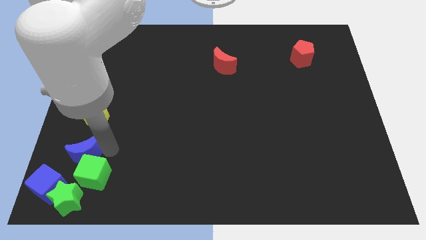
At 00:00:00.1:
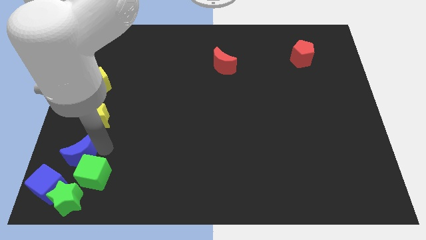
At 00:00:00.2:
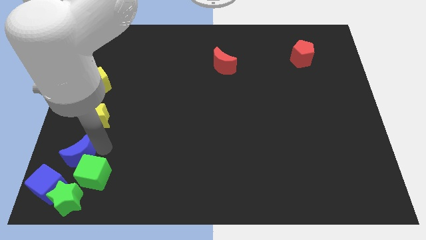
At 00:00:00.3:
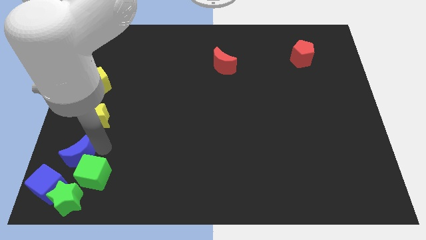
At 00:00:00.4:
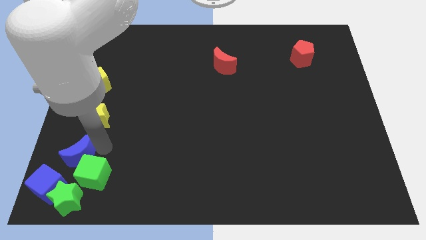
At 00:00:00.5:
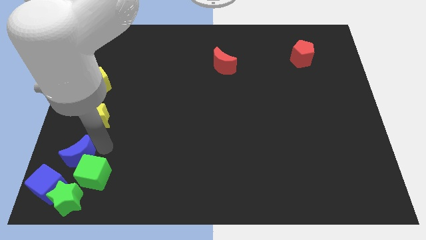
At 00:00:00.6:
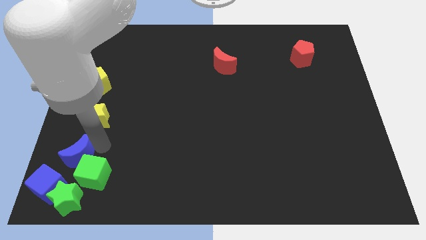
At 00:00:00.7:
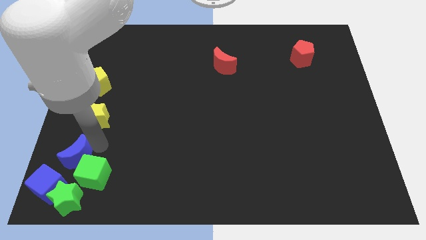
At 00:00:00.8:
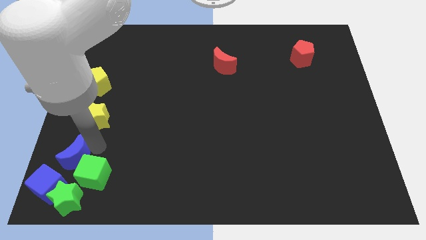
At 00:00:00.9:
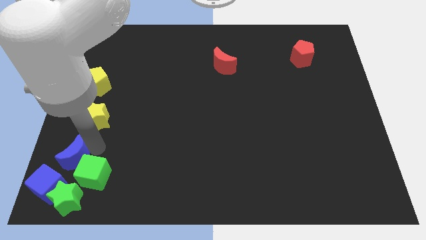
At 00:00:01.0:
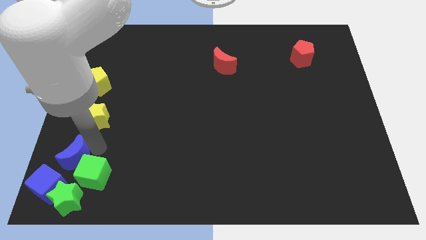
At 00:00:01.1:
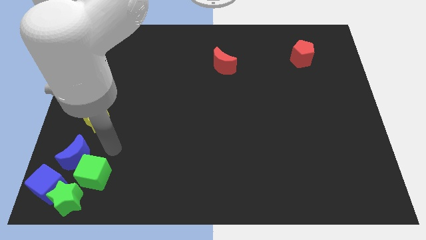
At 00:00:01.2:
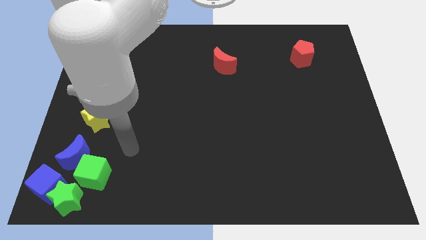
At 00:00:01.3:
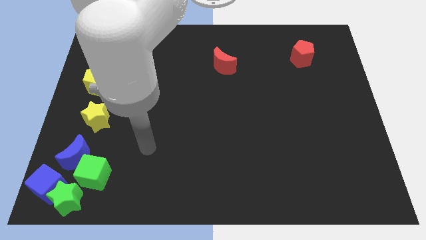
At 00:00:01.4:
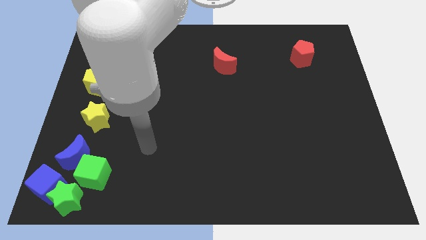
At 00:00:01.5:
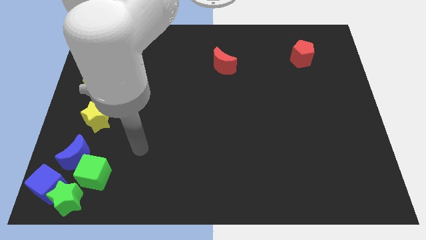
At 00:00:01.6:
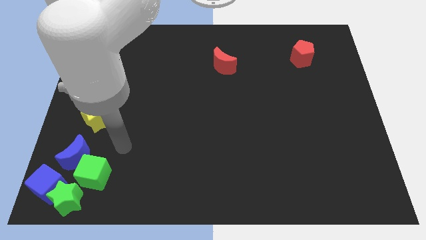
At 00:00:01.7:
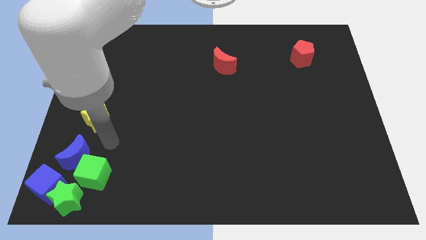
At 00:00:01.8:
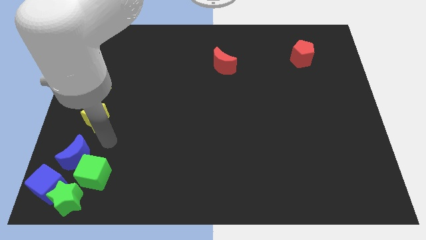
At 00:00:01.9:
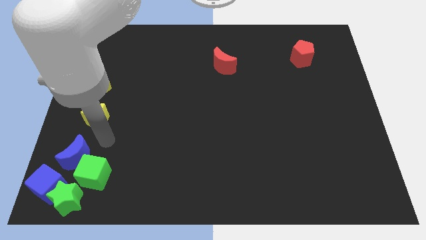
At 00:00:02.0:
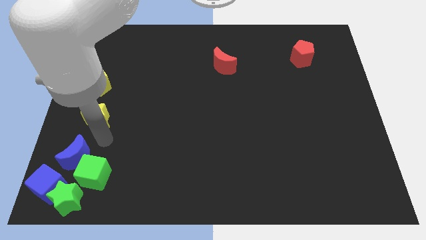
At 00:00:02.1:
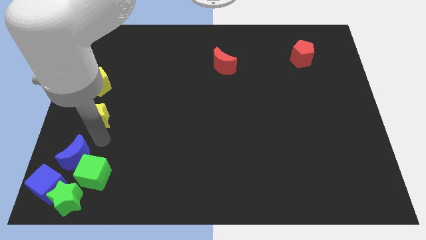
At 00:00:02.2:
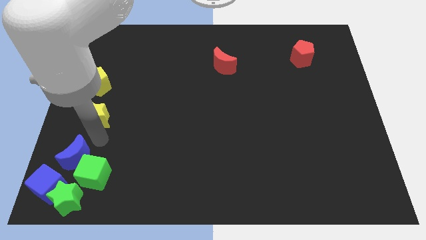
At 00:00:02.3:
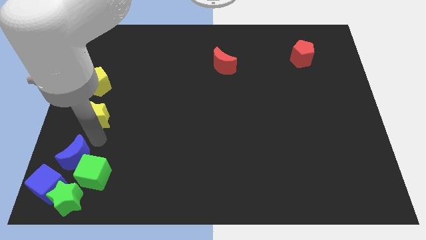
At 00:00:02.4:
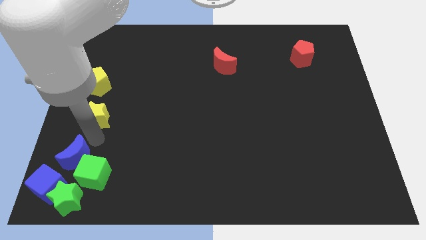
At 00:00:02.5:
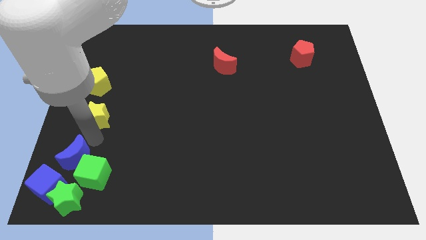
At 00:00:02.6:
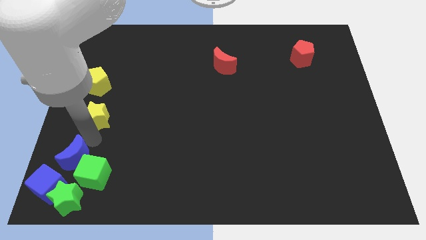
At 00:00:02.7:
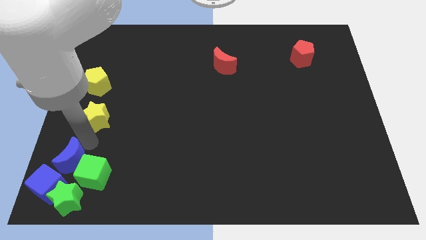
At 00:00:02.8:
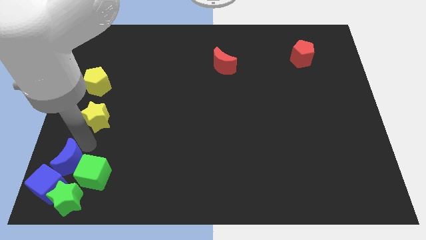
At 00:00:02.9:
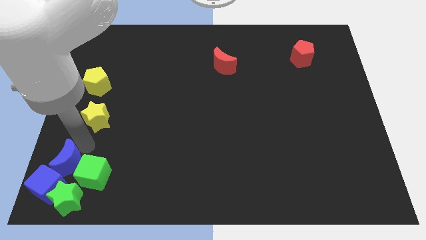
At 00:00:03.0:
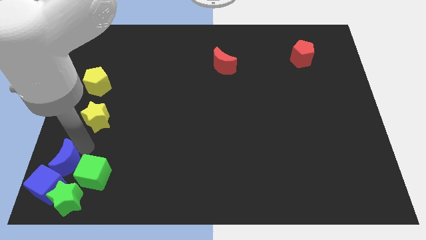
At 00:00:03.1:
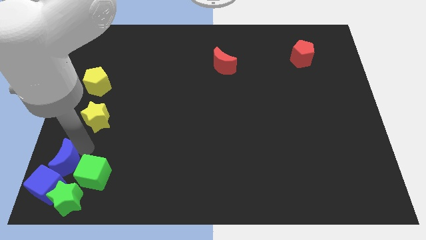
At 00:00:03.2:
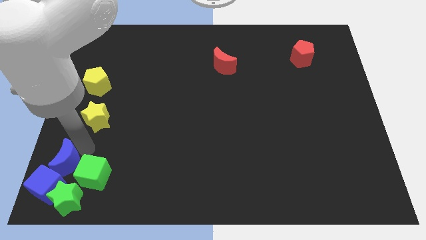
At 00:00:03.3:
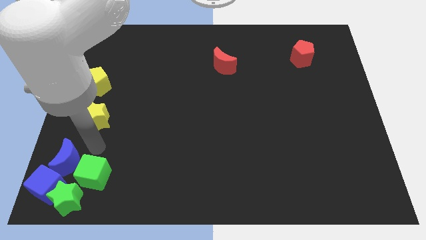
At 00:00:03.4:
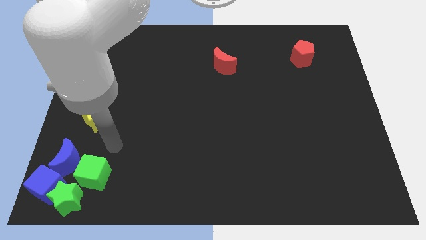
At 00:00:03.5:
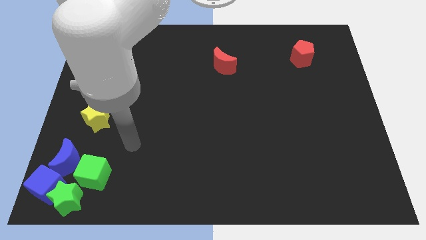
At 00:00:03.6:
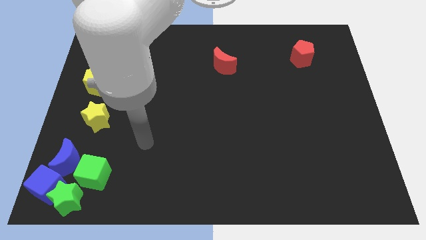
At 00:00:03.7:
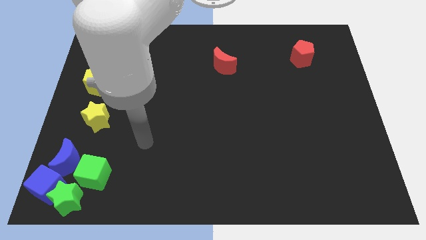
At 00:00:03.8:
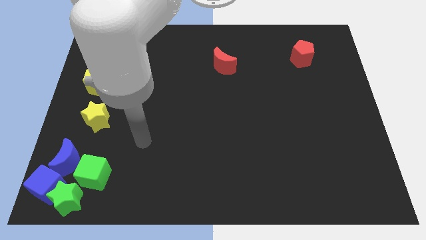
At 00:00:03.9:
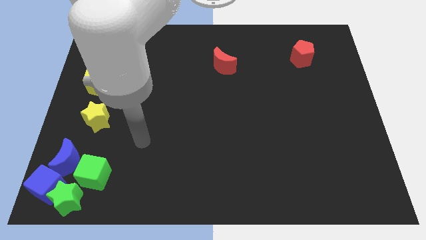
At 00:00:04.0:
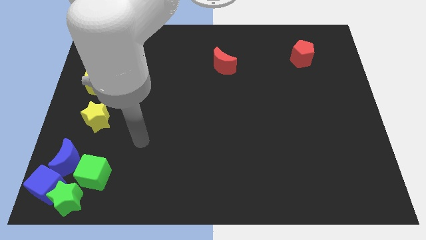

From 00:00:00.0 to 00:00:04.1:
slightly push the blue crescent into the blue cube

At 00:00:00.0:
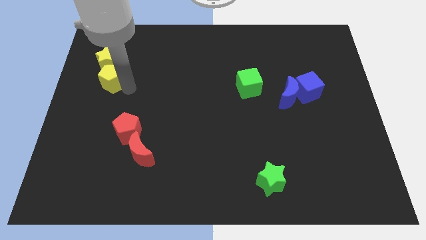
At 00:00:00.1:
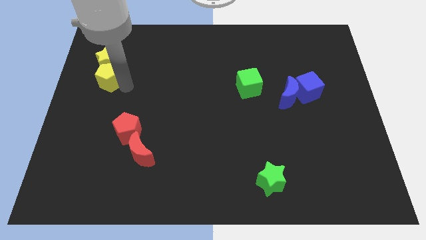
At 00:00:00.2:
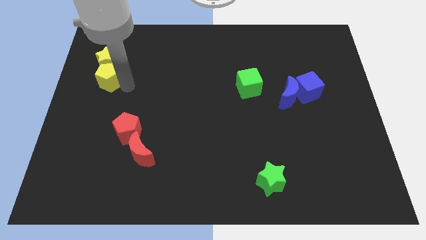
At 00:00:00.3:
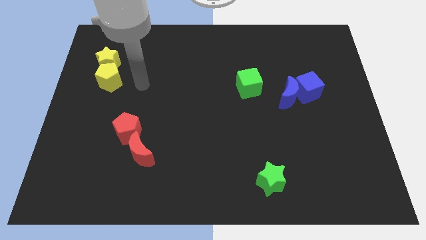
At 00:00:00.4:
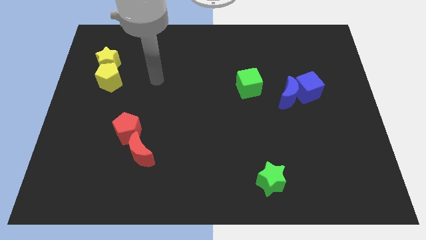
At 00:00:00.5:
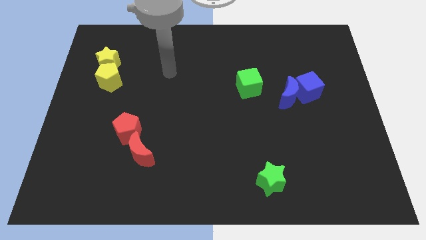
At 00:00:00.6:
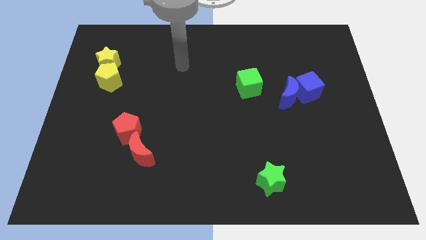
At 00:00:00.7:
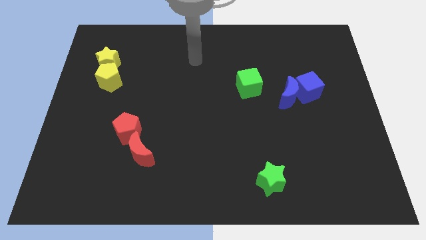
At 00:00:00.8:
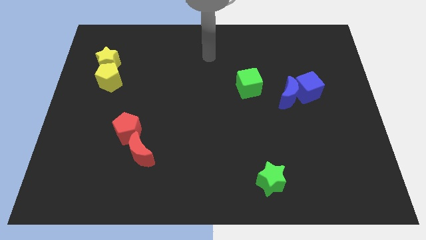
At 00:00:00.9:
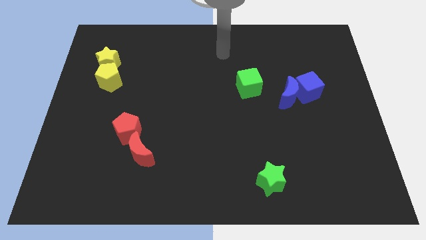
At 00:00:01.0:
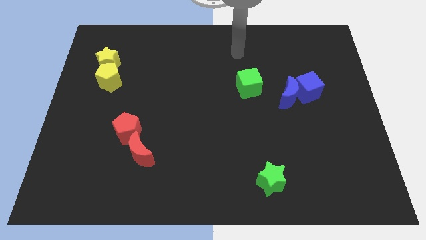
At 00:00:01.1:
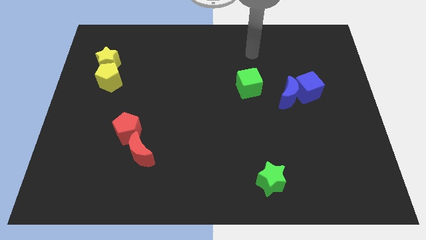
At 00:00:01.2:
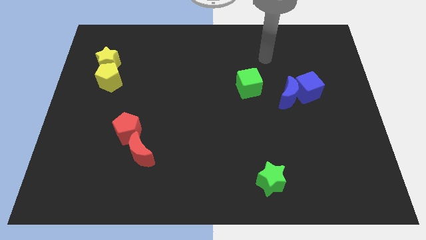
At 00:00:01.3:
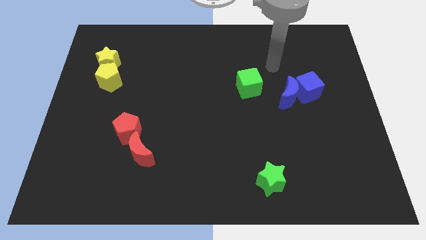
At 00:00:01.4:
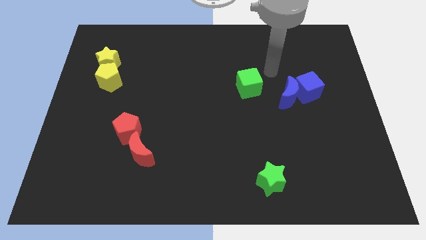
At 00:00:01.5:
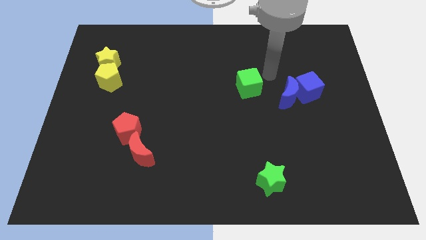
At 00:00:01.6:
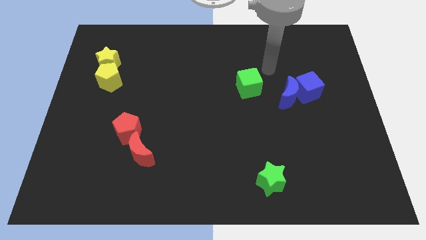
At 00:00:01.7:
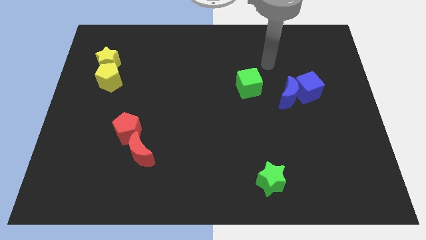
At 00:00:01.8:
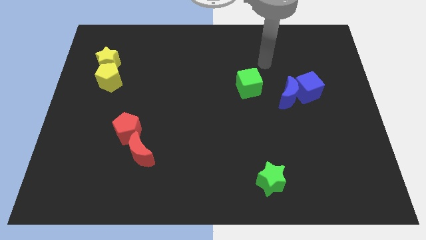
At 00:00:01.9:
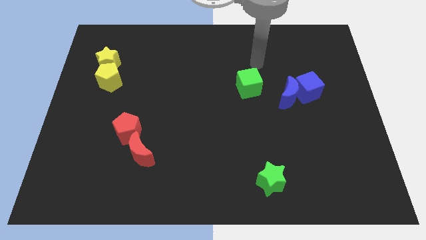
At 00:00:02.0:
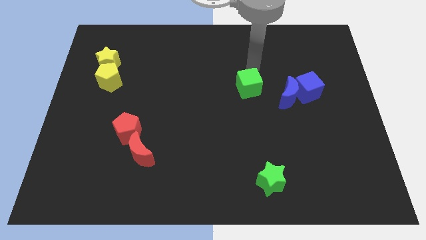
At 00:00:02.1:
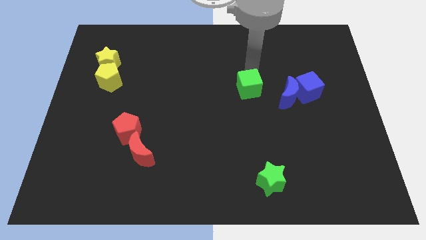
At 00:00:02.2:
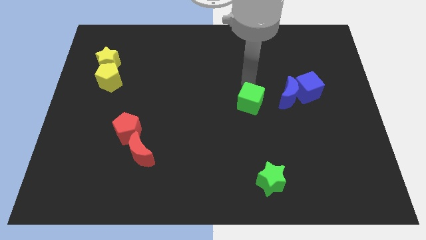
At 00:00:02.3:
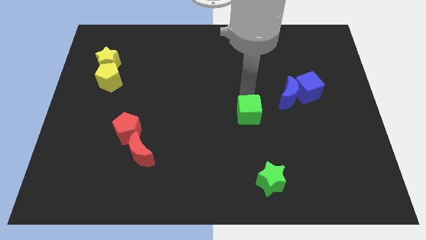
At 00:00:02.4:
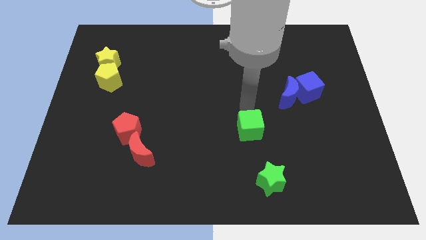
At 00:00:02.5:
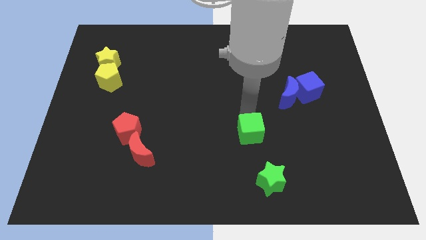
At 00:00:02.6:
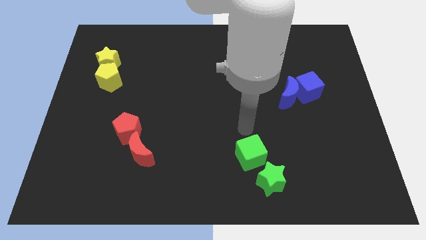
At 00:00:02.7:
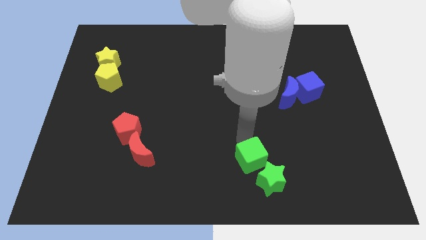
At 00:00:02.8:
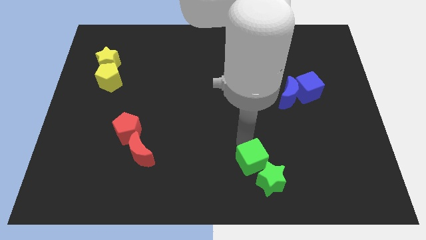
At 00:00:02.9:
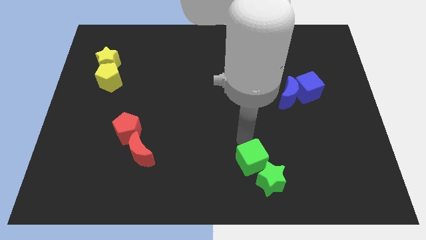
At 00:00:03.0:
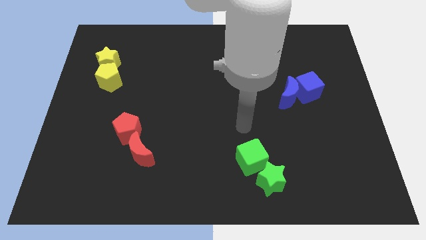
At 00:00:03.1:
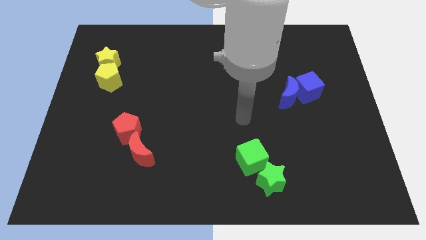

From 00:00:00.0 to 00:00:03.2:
place the green cube at the top left of the green star

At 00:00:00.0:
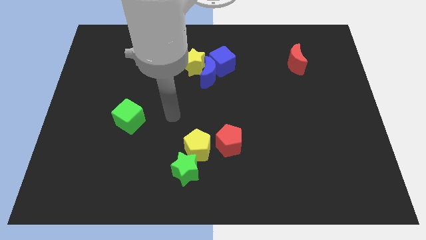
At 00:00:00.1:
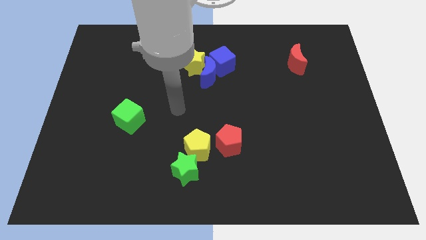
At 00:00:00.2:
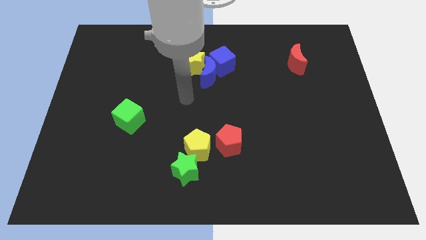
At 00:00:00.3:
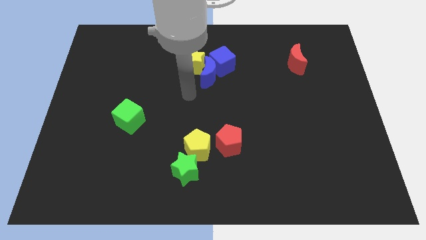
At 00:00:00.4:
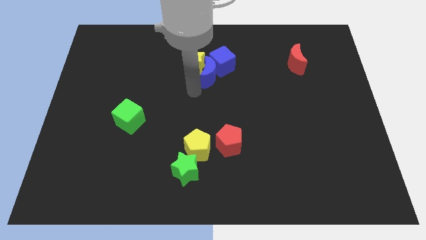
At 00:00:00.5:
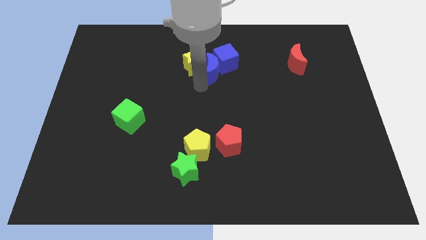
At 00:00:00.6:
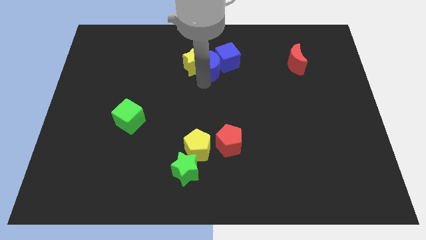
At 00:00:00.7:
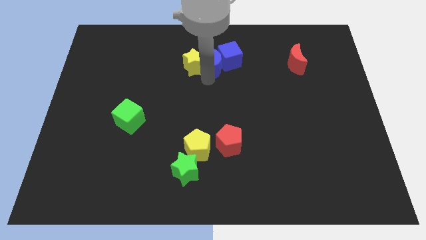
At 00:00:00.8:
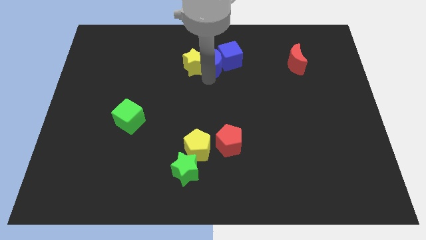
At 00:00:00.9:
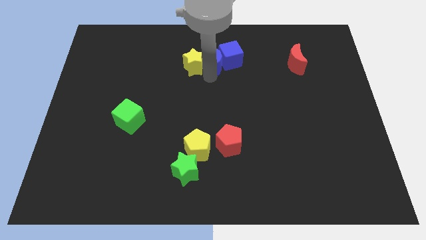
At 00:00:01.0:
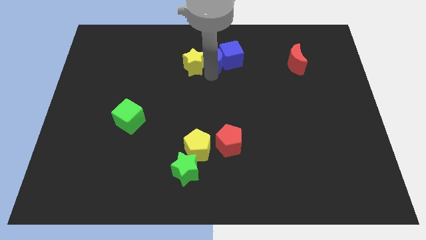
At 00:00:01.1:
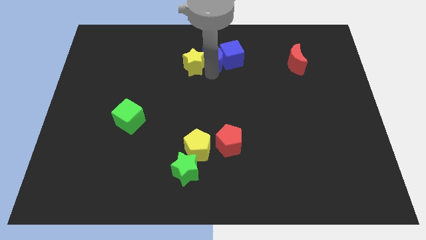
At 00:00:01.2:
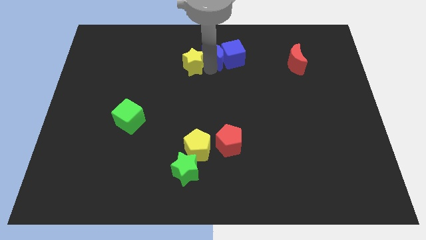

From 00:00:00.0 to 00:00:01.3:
slide the blue moon in between the yellow star and the blue cube

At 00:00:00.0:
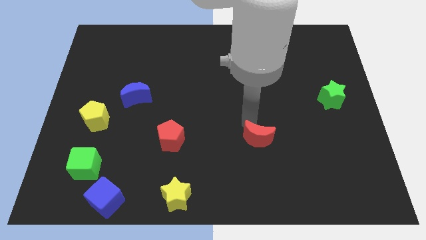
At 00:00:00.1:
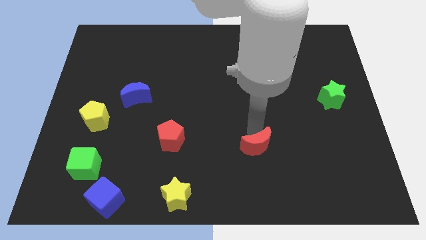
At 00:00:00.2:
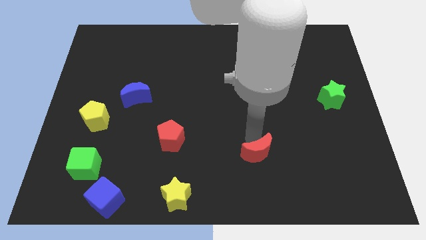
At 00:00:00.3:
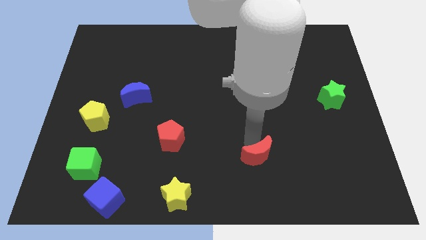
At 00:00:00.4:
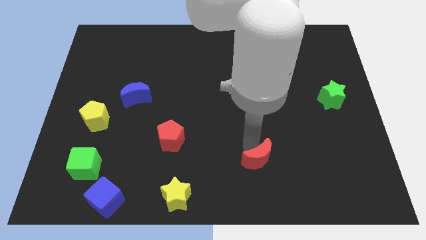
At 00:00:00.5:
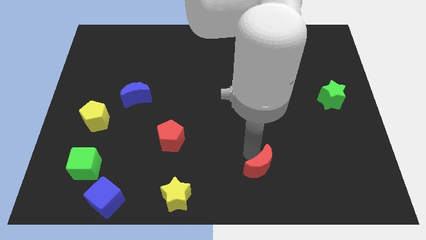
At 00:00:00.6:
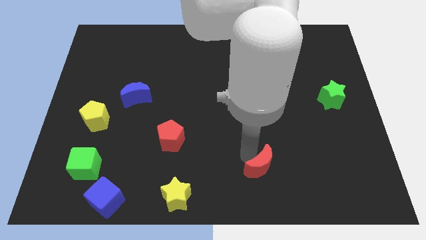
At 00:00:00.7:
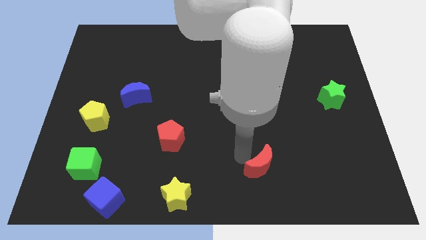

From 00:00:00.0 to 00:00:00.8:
slightly push the red crescent towards the bottom center of board
